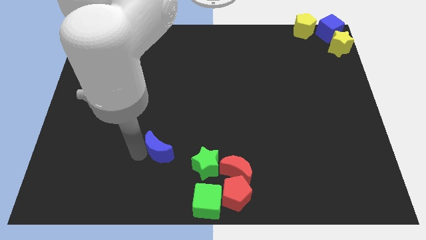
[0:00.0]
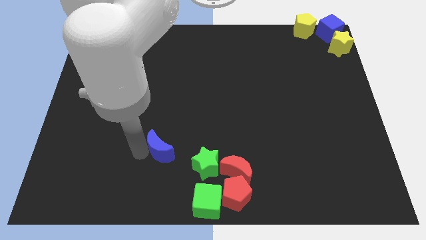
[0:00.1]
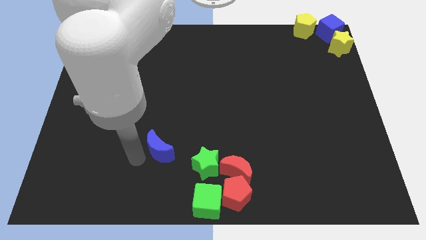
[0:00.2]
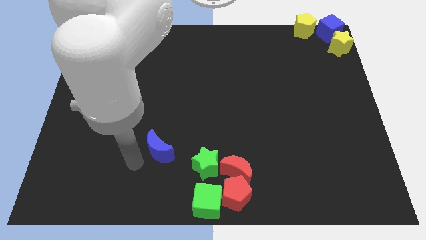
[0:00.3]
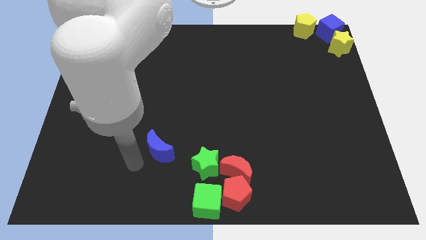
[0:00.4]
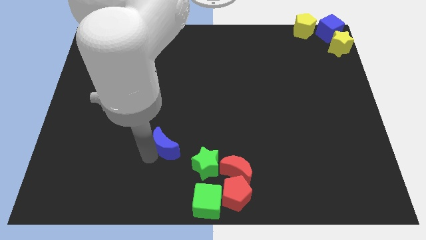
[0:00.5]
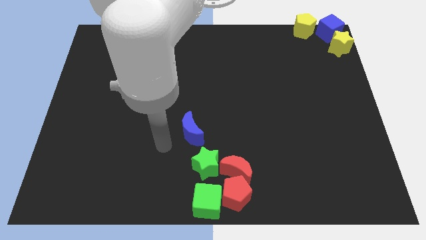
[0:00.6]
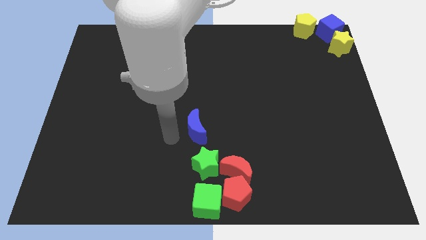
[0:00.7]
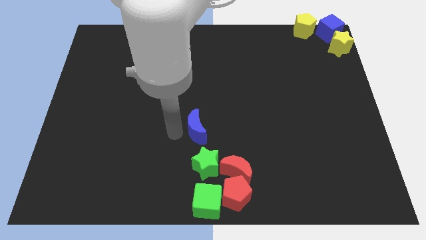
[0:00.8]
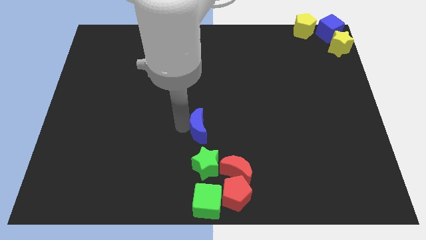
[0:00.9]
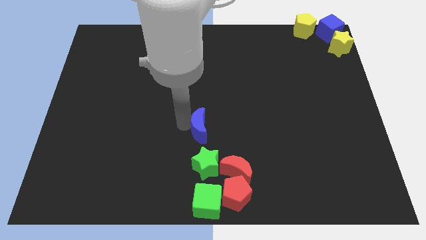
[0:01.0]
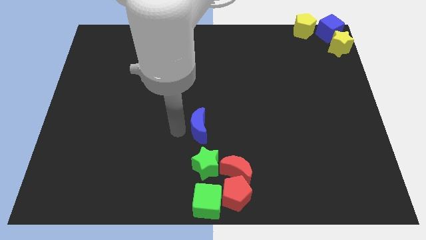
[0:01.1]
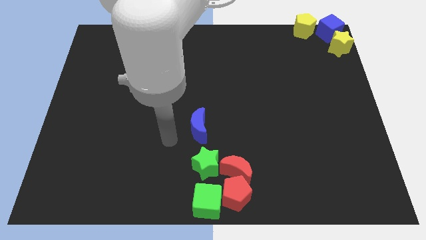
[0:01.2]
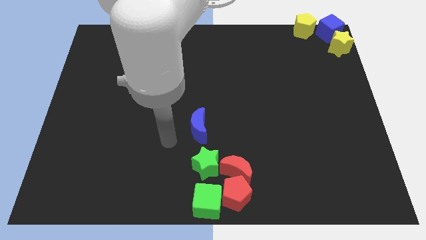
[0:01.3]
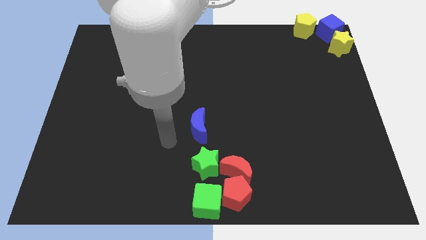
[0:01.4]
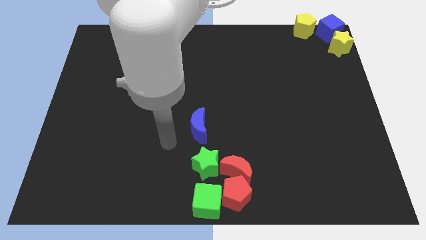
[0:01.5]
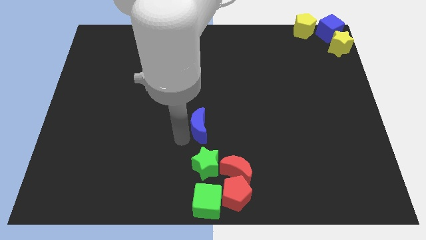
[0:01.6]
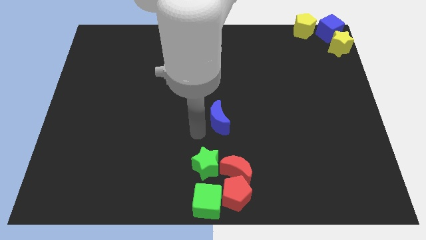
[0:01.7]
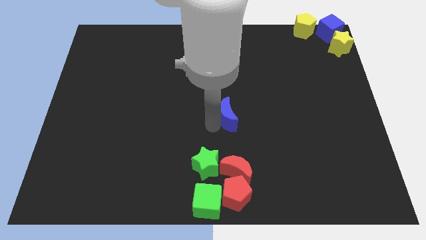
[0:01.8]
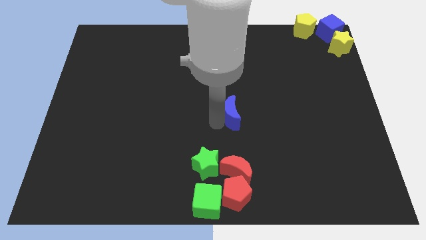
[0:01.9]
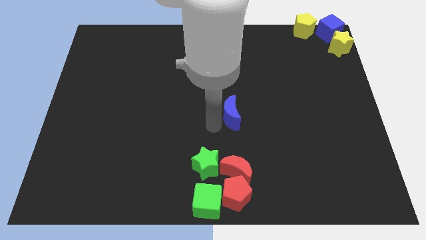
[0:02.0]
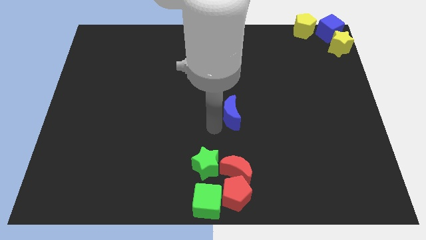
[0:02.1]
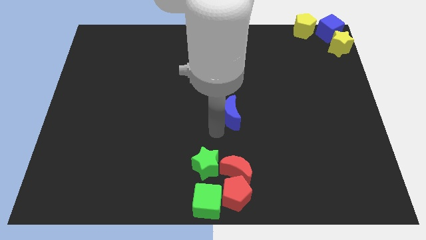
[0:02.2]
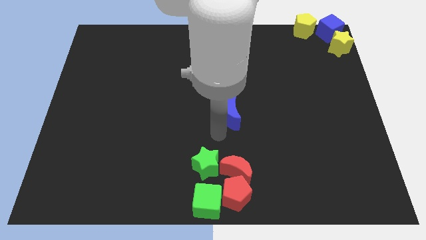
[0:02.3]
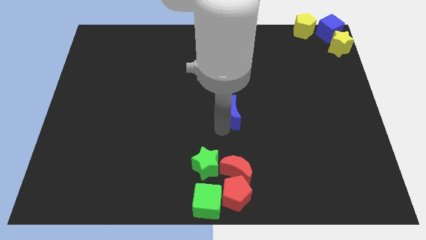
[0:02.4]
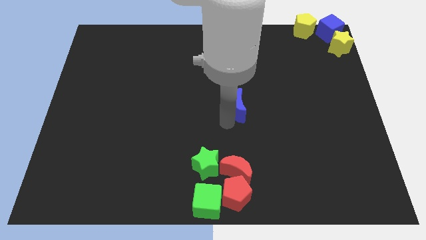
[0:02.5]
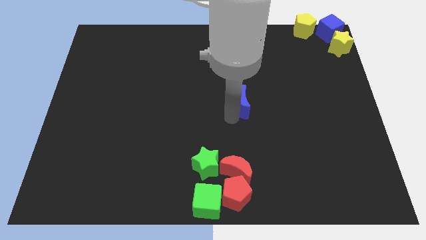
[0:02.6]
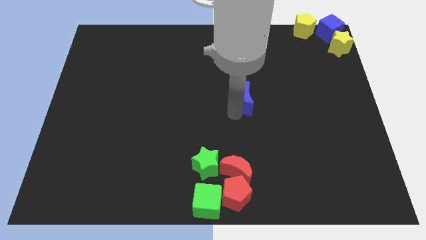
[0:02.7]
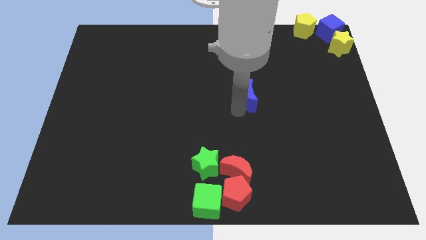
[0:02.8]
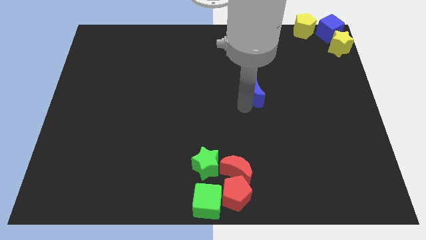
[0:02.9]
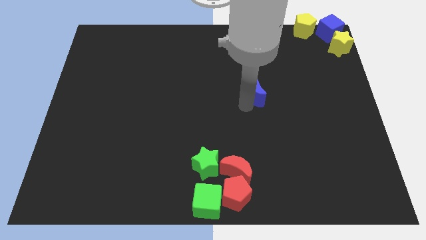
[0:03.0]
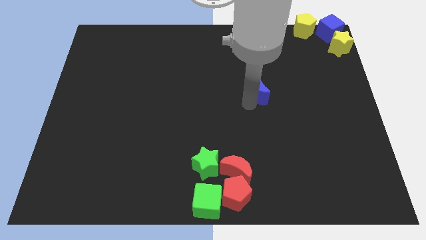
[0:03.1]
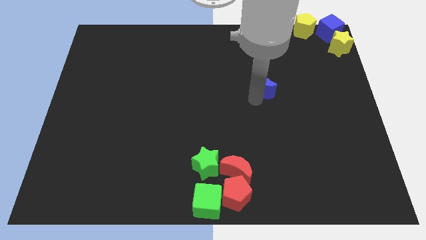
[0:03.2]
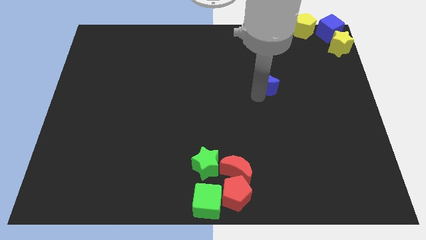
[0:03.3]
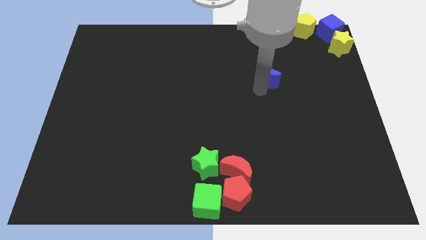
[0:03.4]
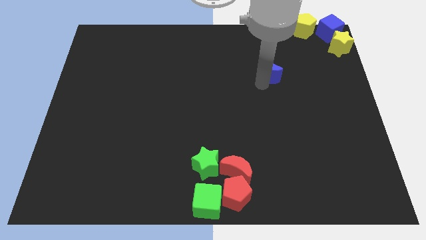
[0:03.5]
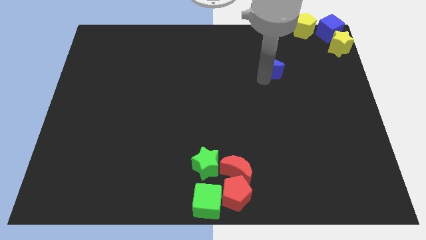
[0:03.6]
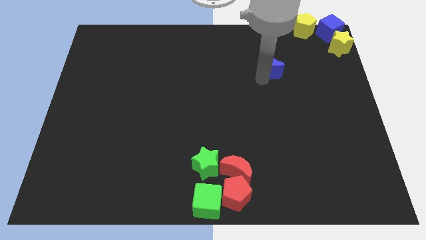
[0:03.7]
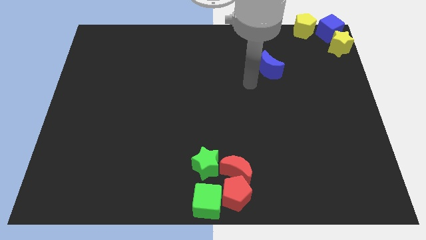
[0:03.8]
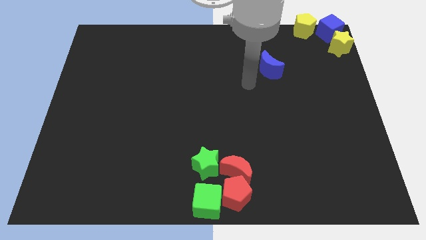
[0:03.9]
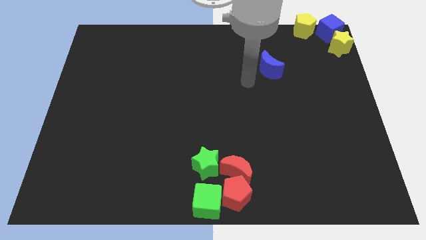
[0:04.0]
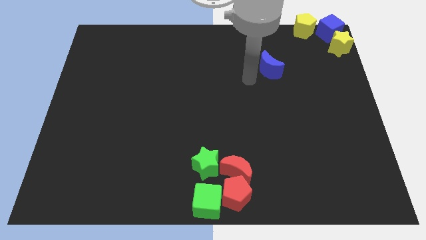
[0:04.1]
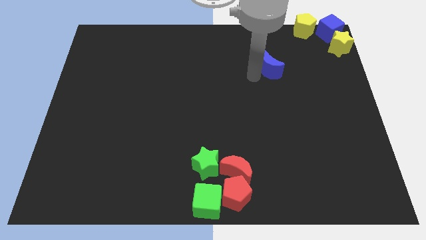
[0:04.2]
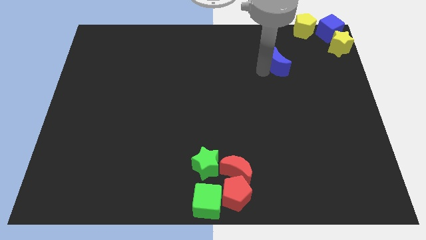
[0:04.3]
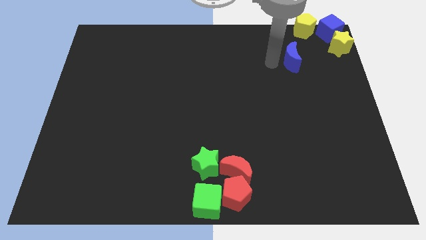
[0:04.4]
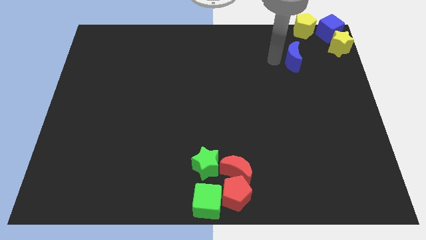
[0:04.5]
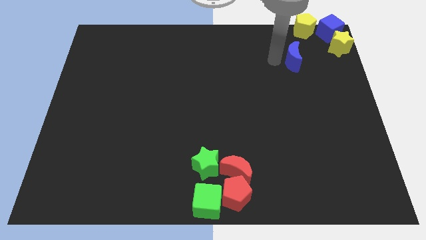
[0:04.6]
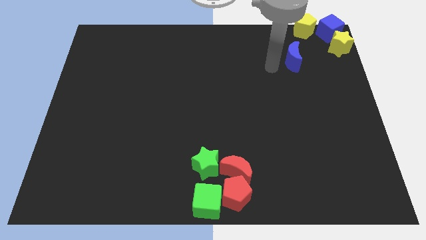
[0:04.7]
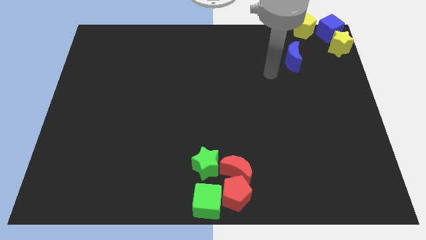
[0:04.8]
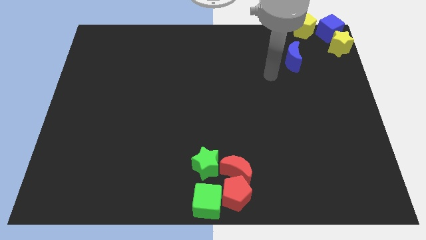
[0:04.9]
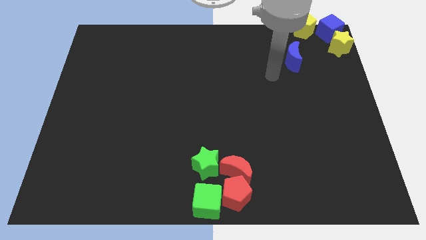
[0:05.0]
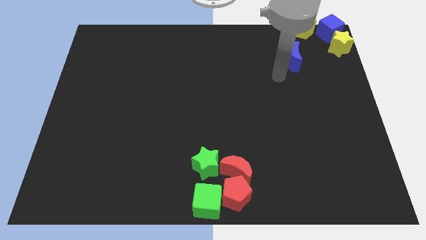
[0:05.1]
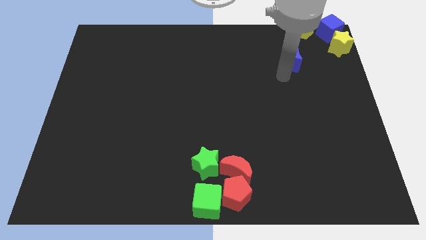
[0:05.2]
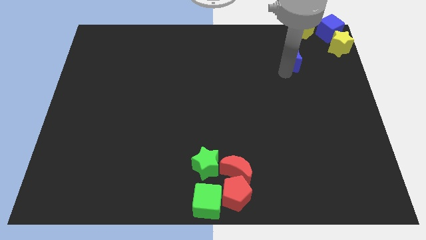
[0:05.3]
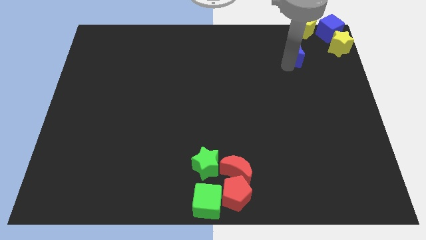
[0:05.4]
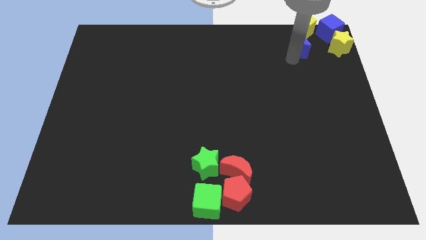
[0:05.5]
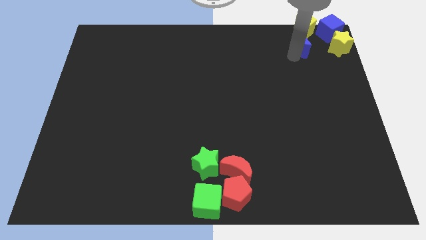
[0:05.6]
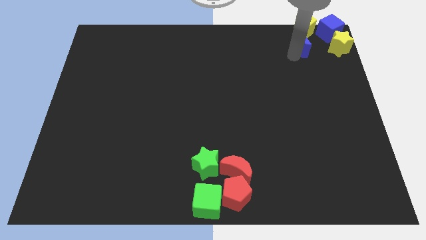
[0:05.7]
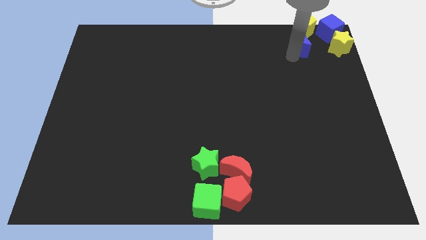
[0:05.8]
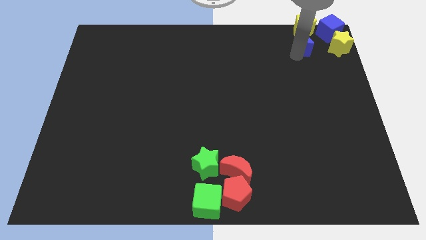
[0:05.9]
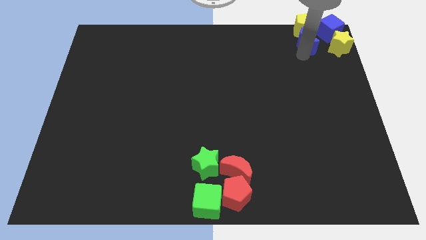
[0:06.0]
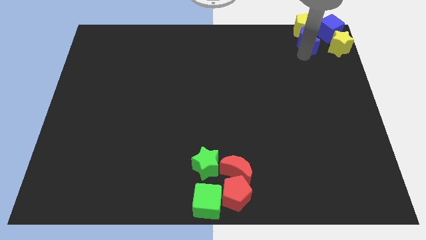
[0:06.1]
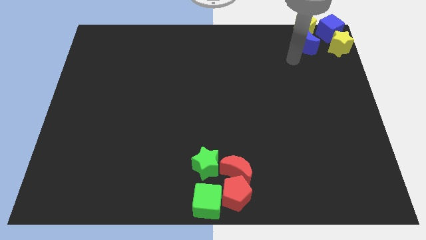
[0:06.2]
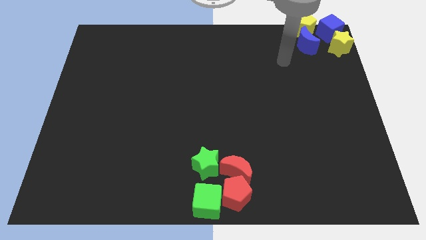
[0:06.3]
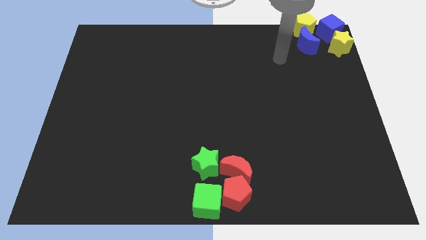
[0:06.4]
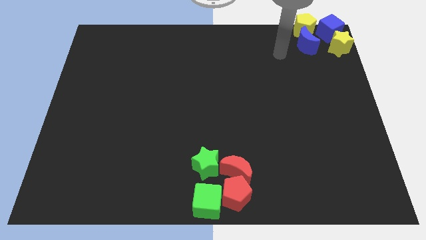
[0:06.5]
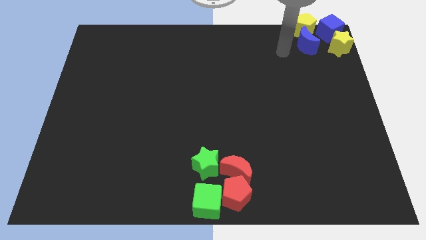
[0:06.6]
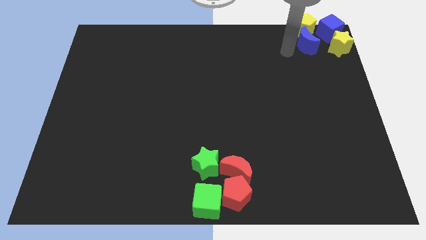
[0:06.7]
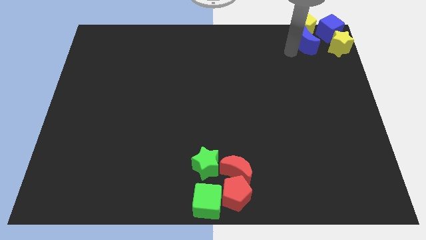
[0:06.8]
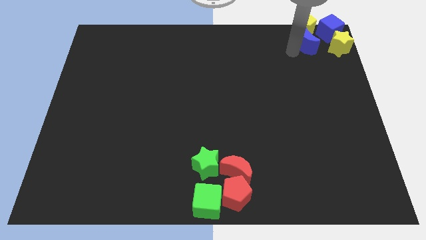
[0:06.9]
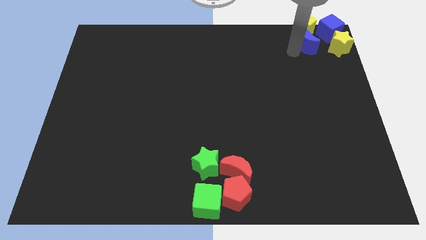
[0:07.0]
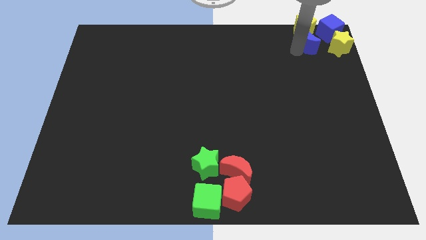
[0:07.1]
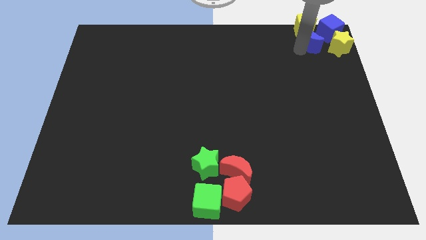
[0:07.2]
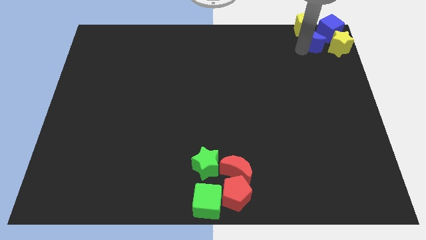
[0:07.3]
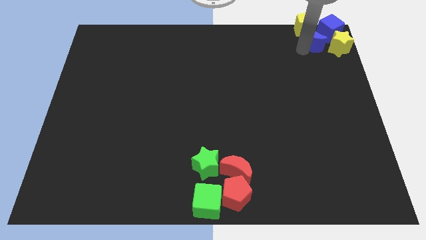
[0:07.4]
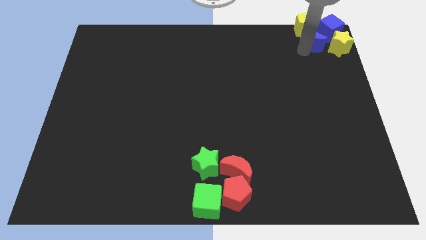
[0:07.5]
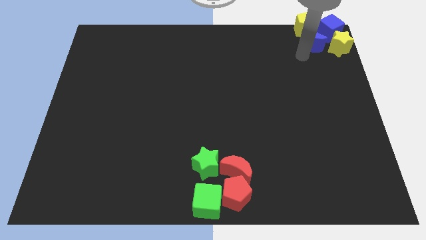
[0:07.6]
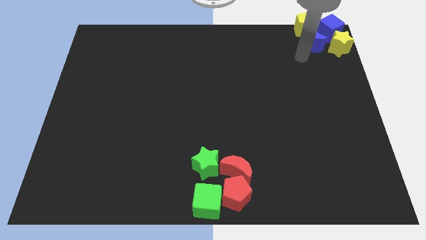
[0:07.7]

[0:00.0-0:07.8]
push the blue moon into blue cube

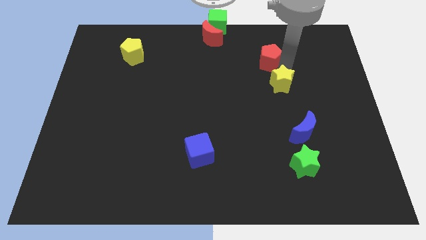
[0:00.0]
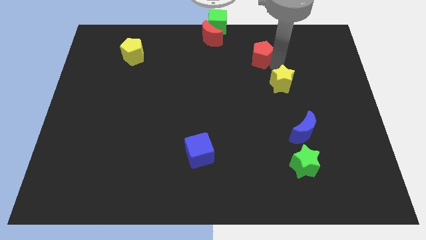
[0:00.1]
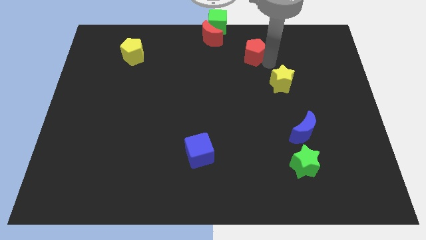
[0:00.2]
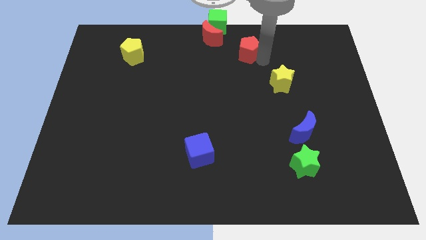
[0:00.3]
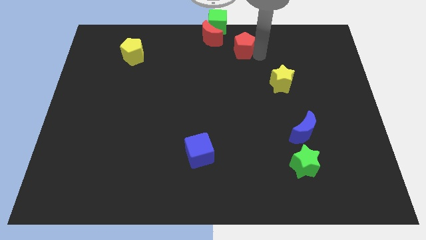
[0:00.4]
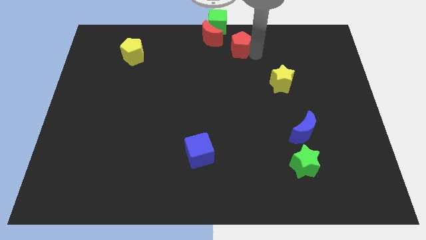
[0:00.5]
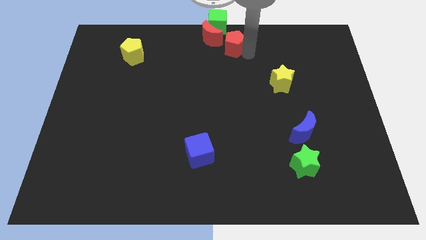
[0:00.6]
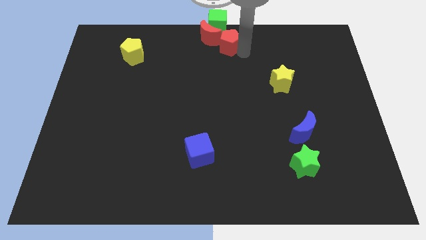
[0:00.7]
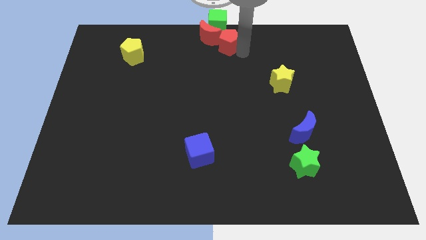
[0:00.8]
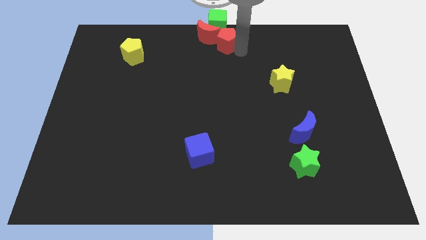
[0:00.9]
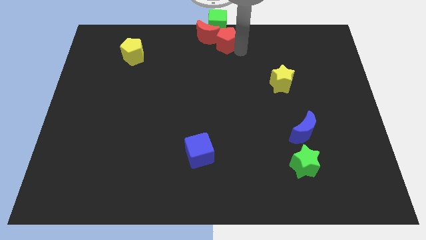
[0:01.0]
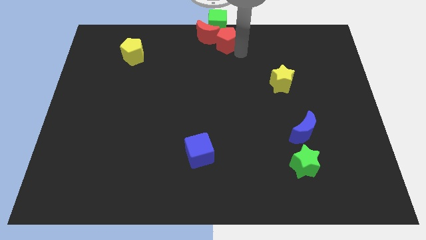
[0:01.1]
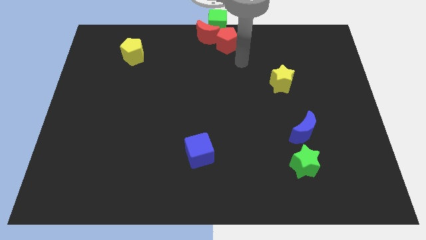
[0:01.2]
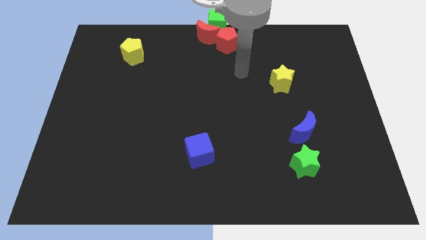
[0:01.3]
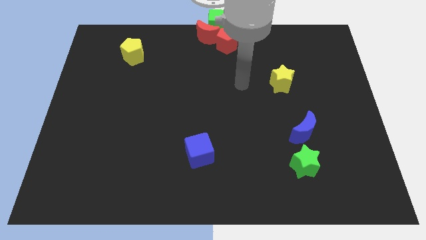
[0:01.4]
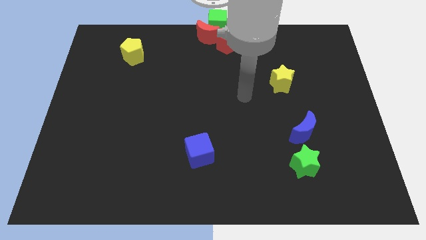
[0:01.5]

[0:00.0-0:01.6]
push the red pentagon to the top center
